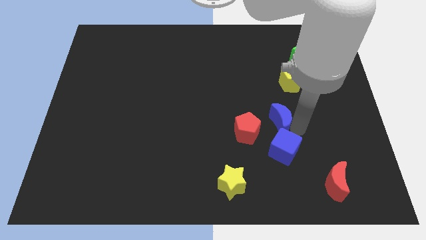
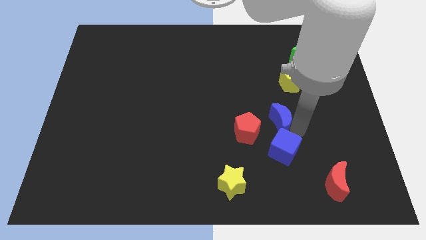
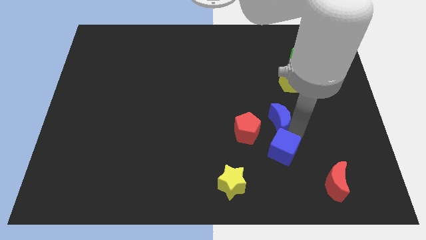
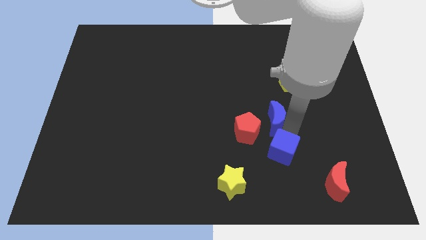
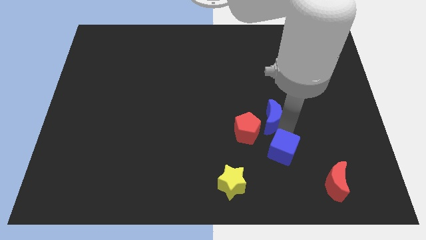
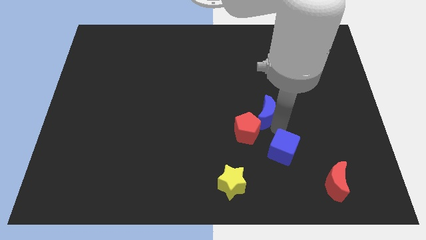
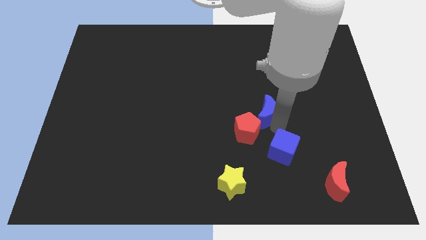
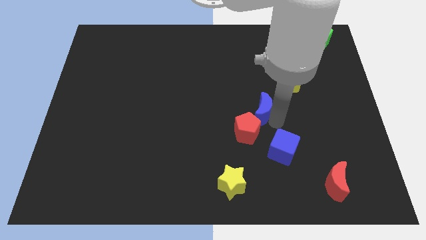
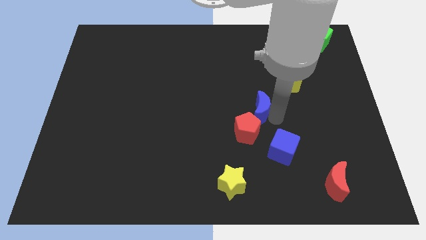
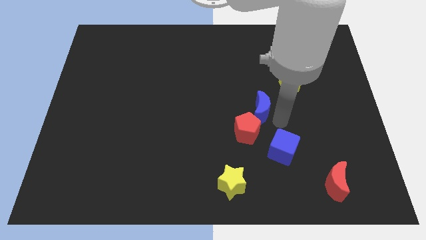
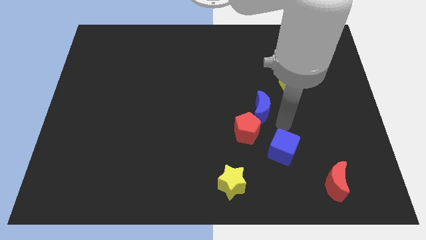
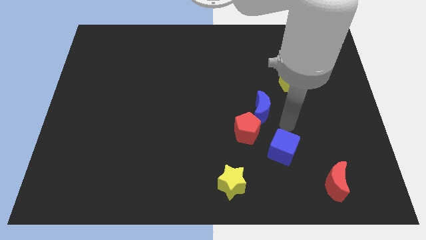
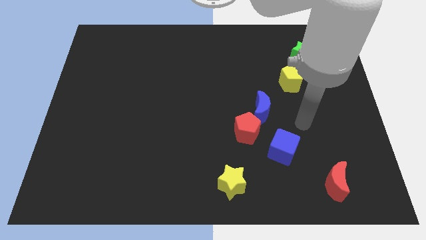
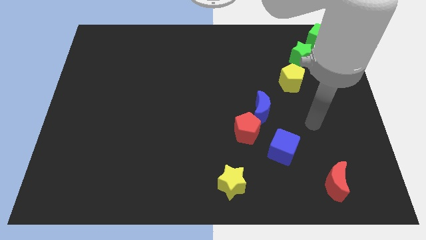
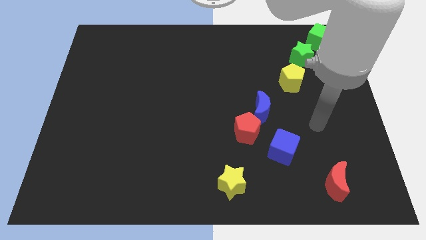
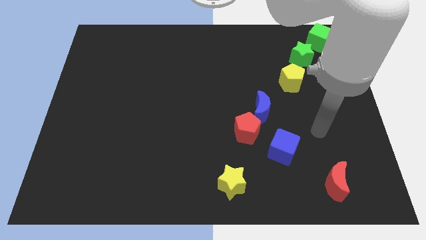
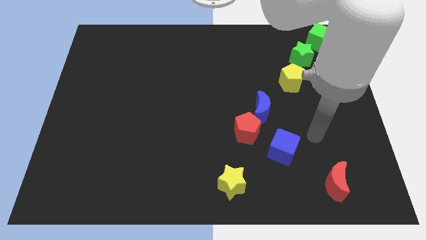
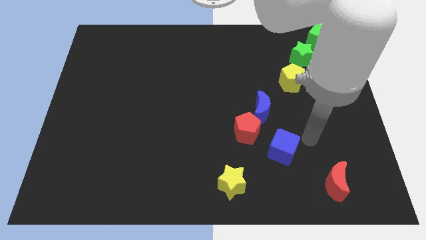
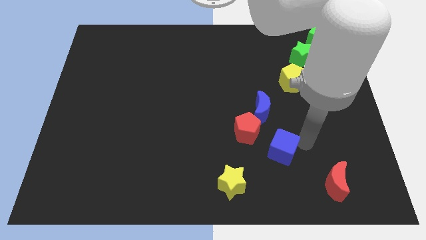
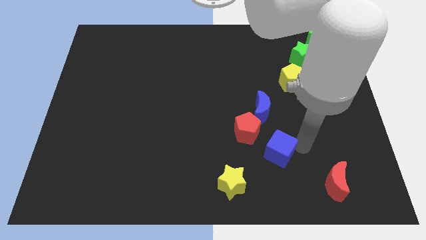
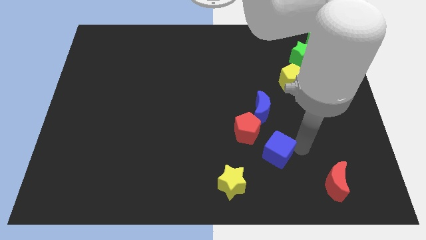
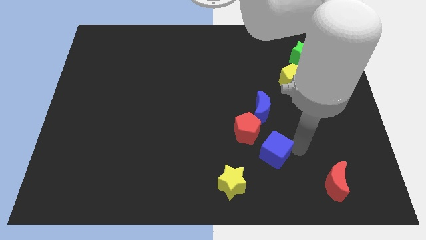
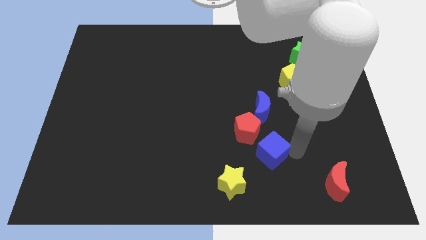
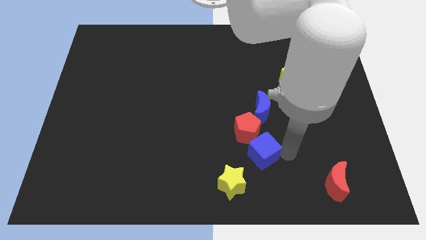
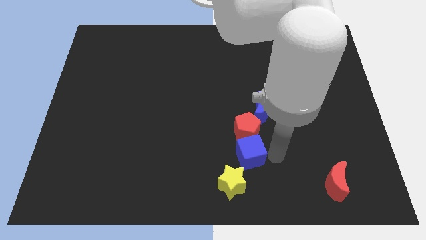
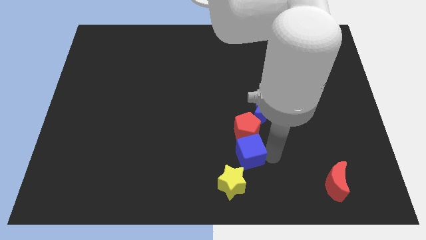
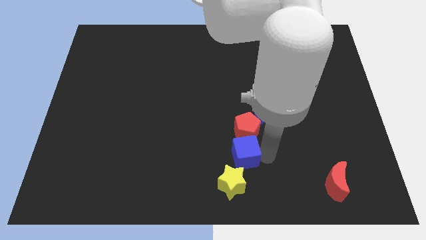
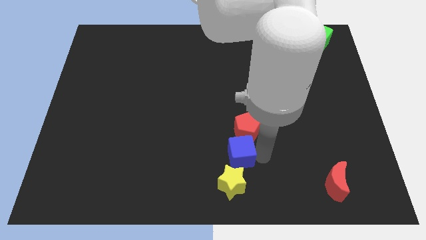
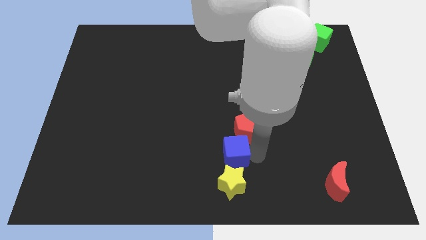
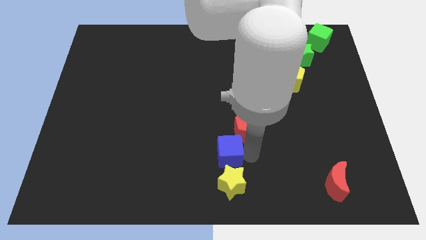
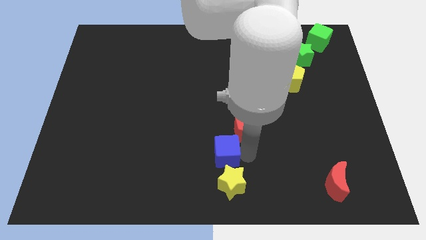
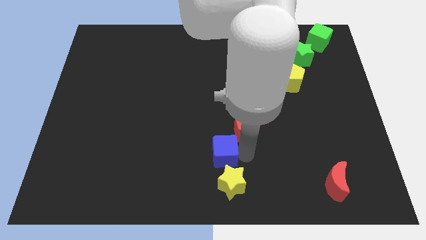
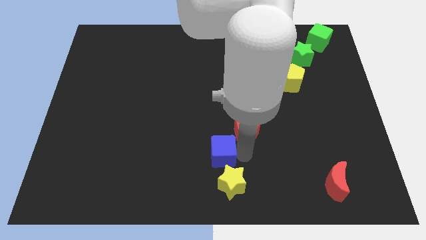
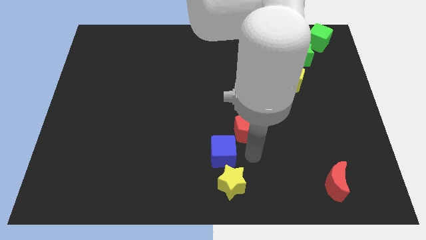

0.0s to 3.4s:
move the blue cube to the top side of the yellow star

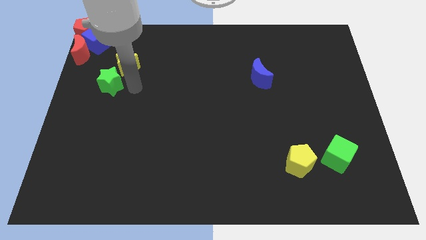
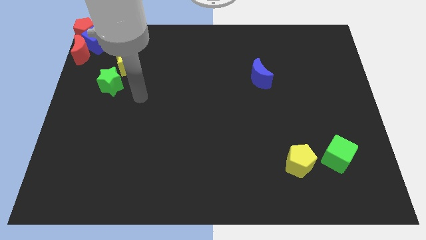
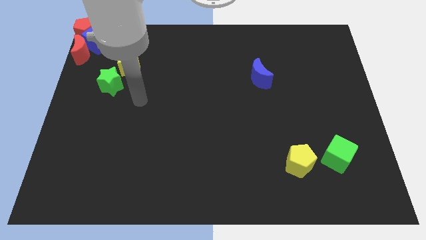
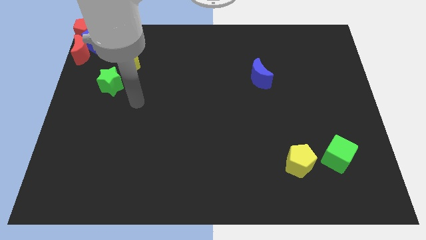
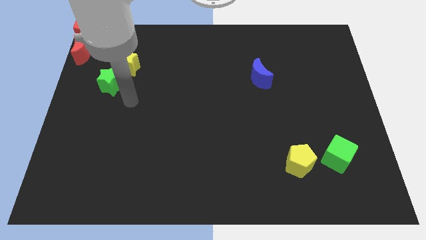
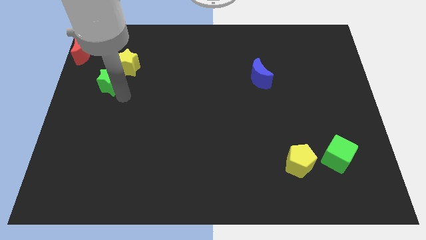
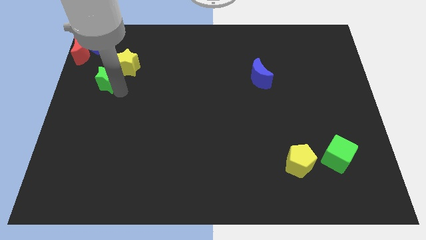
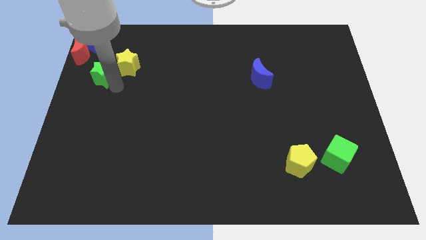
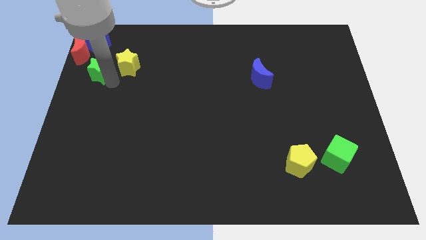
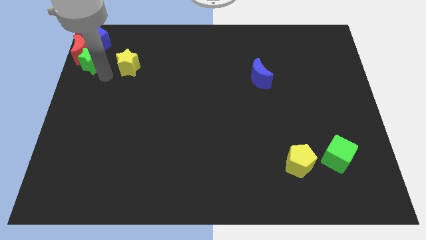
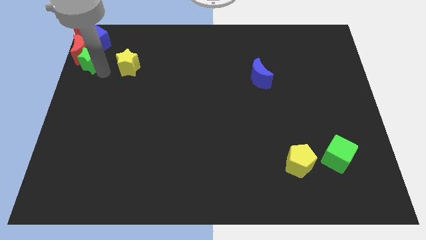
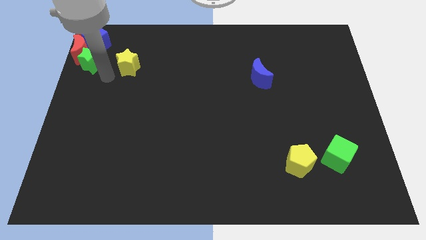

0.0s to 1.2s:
separate green star from yellow star

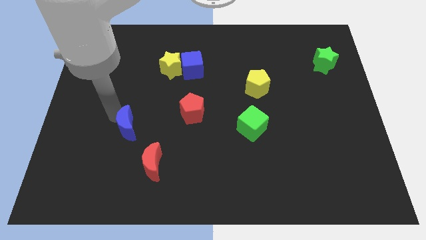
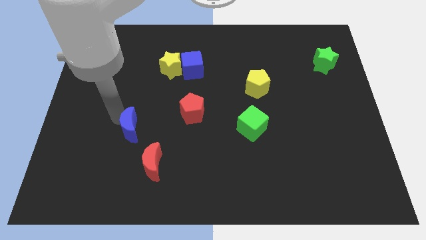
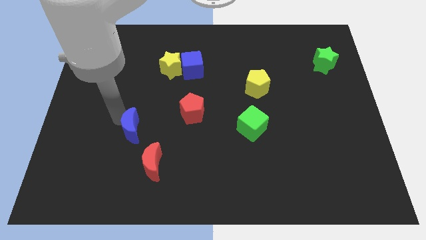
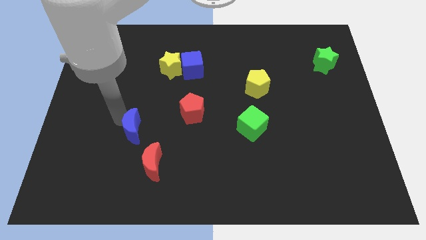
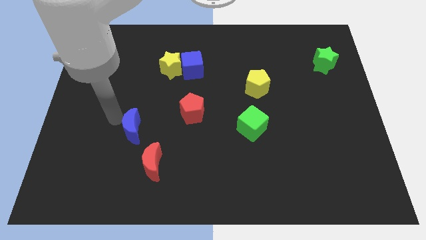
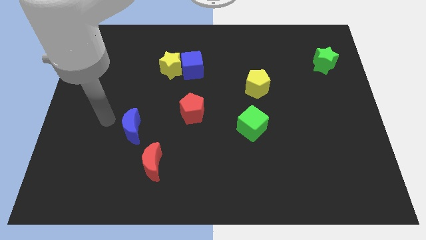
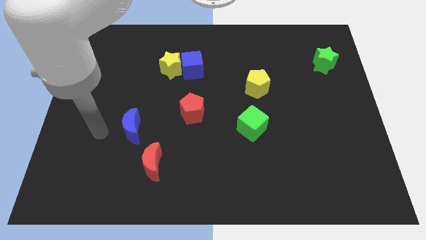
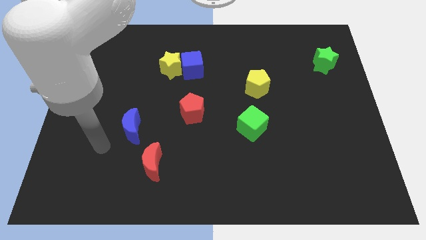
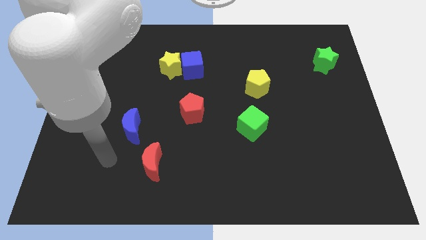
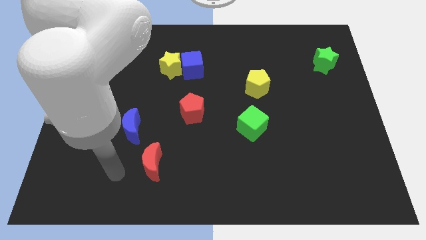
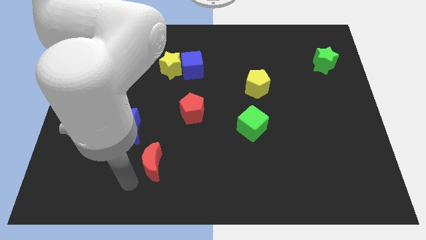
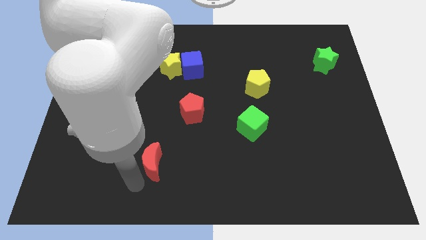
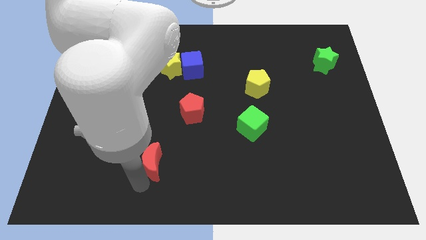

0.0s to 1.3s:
place your hand towards the red moon

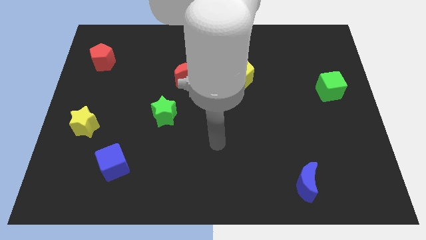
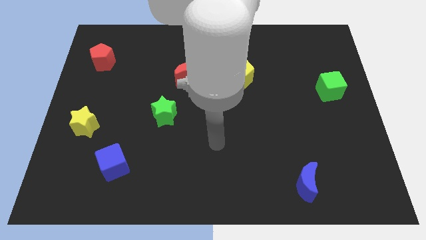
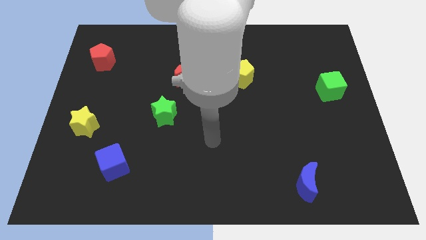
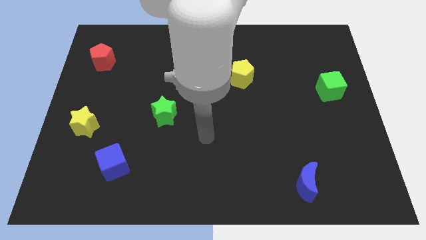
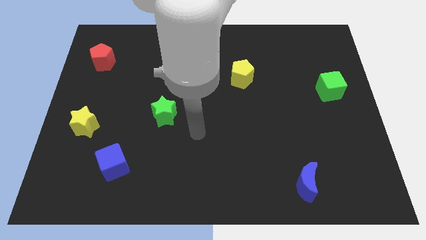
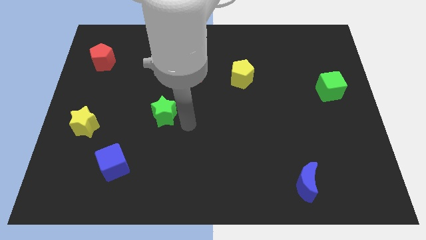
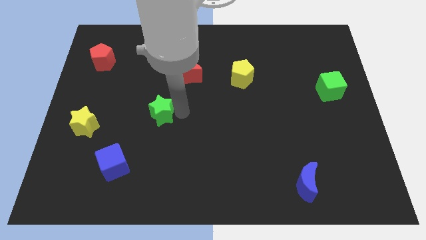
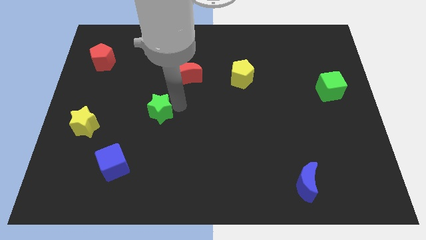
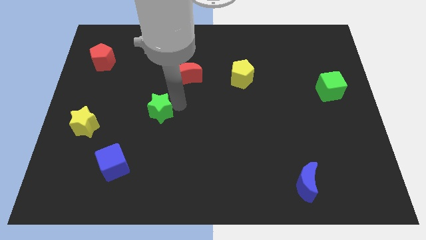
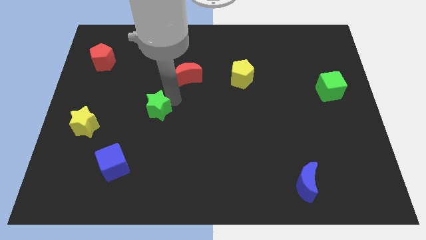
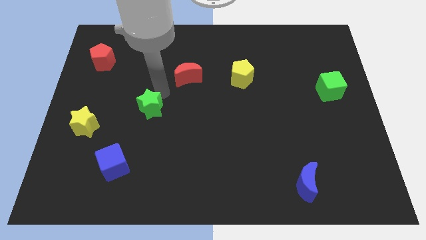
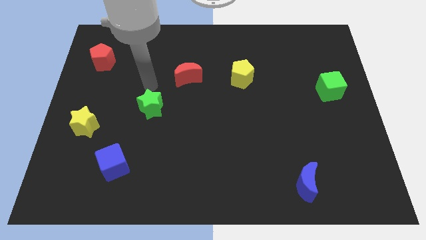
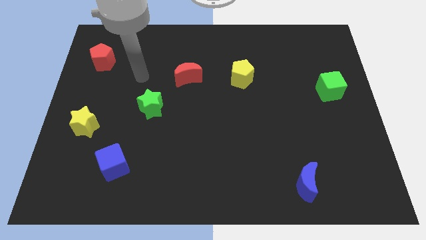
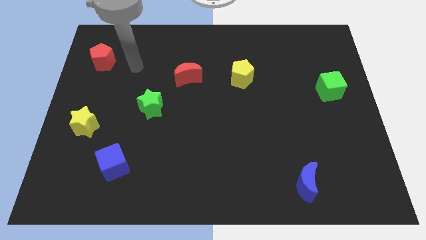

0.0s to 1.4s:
move the green star slightly up

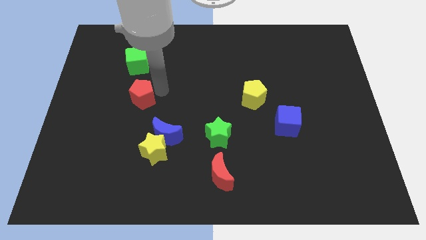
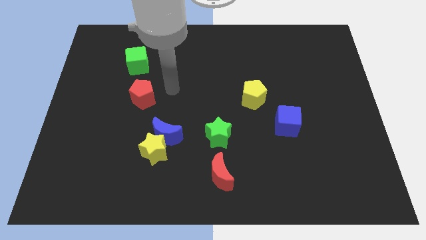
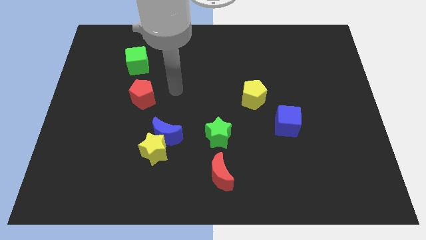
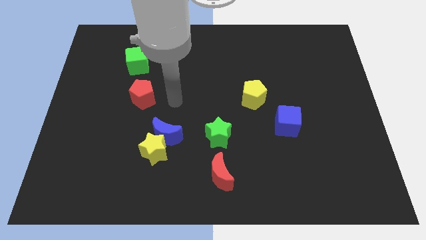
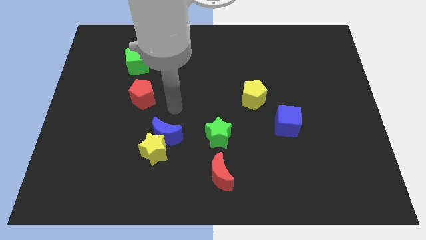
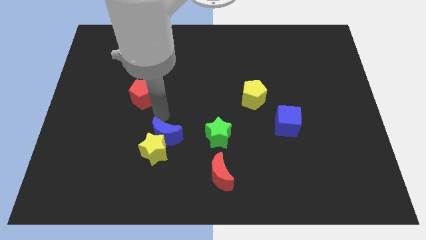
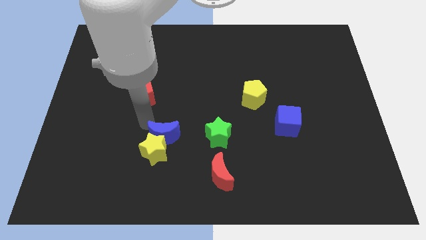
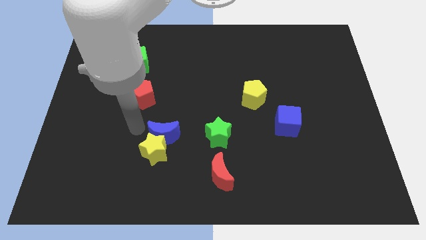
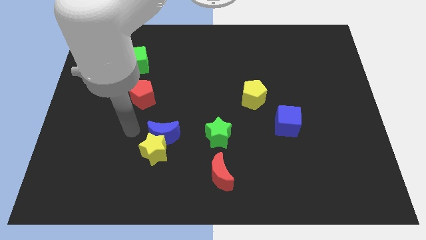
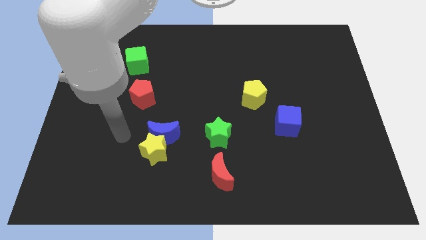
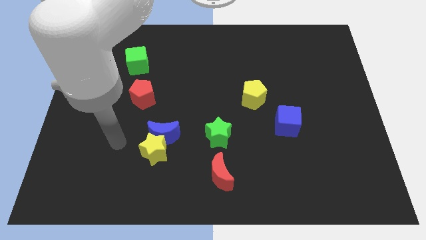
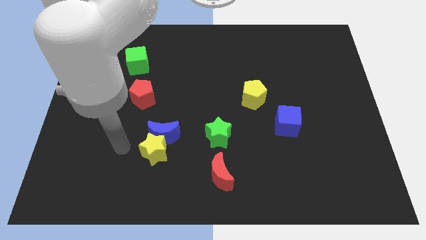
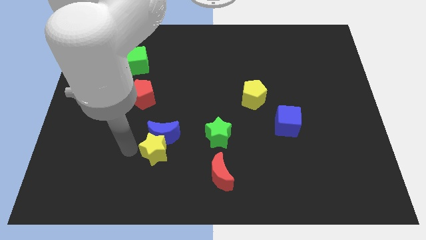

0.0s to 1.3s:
touch the blue crescent

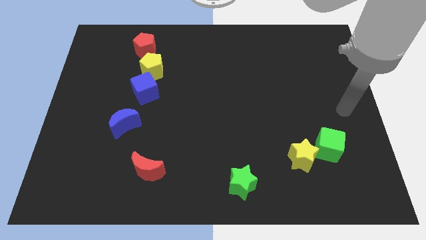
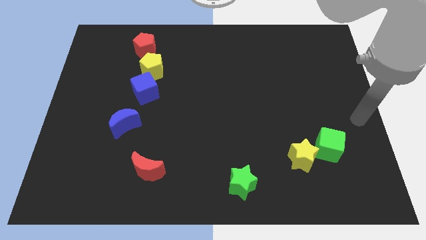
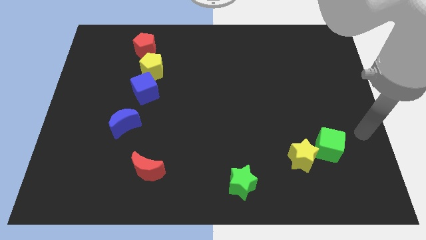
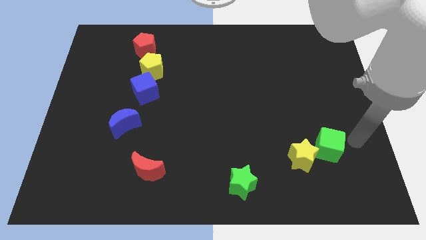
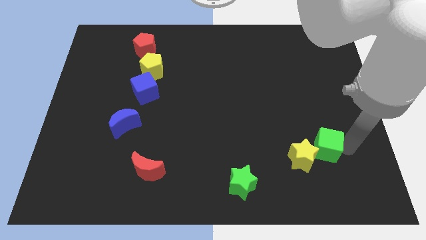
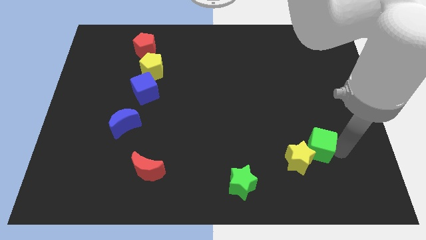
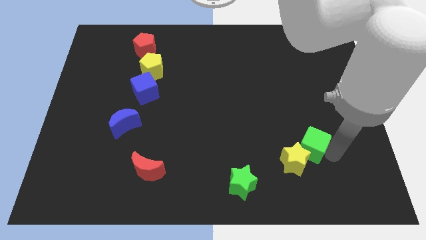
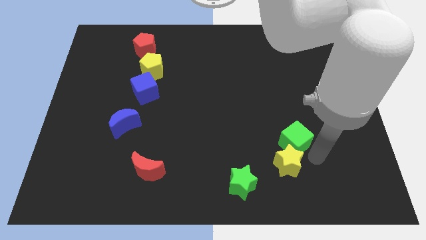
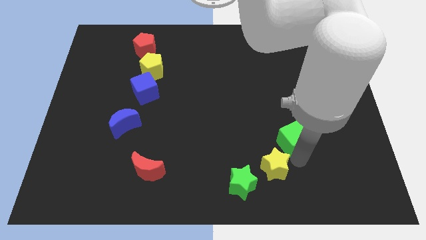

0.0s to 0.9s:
push the green cube and yellow star towards the green star
